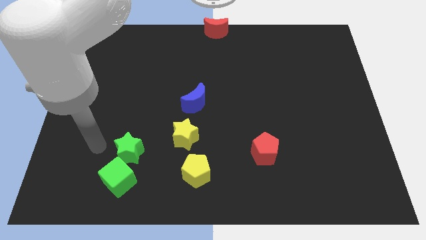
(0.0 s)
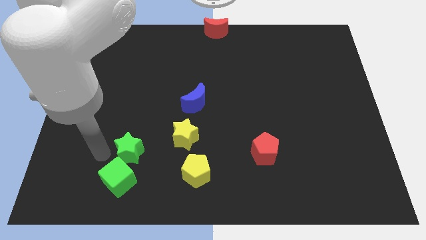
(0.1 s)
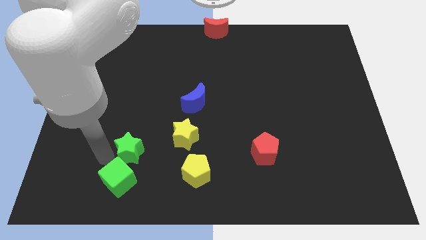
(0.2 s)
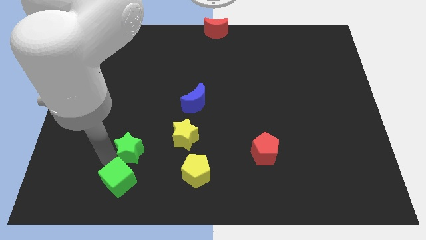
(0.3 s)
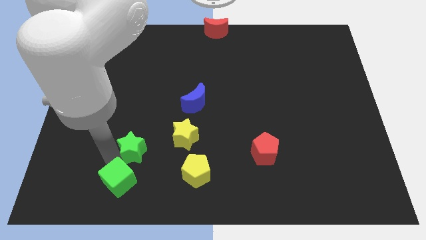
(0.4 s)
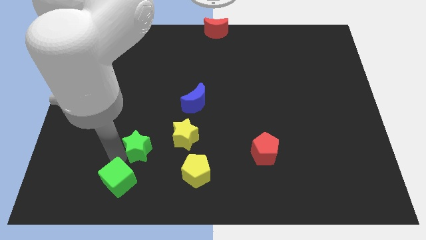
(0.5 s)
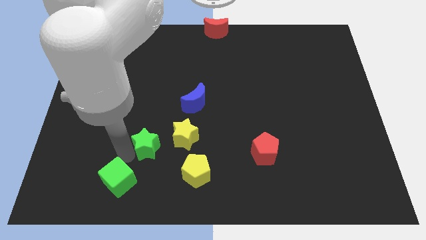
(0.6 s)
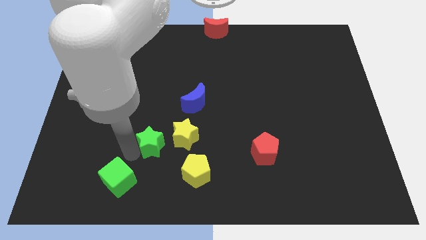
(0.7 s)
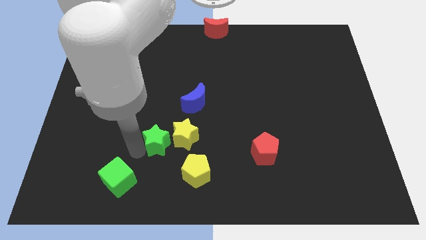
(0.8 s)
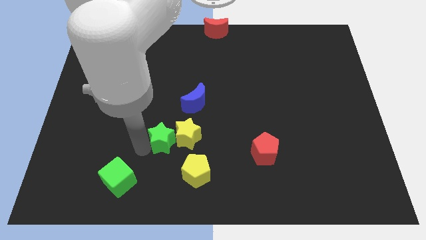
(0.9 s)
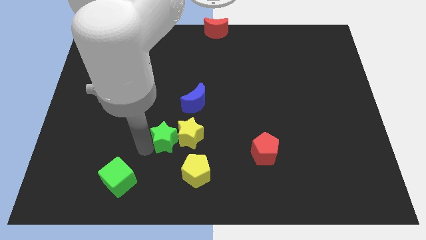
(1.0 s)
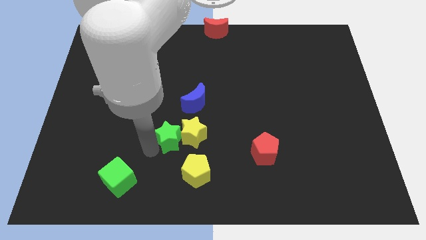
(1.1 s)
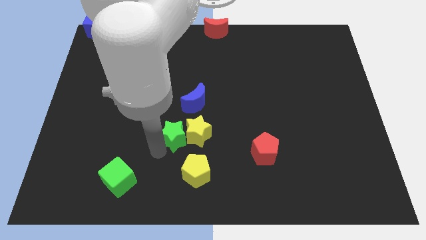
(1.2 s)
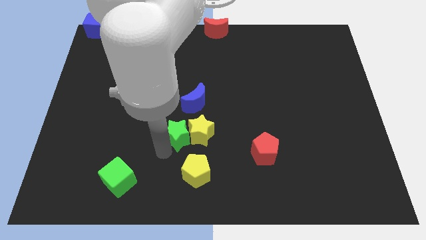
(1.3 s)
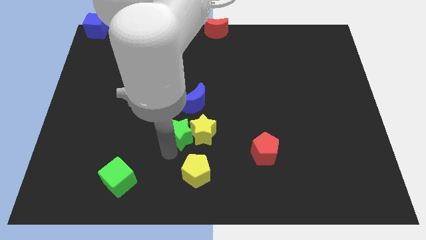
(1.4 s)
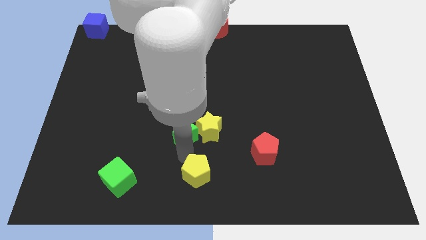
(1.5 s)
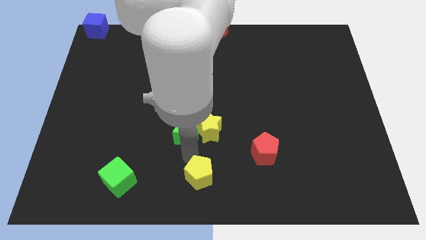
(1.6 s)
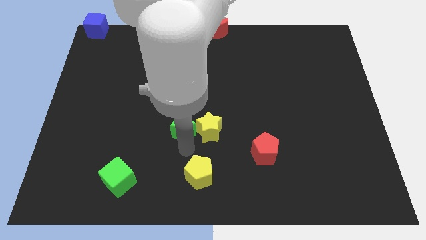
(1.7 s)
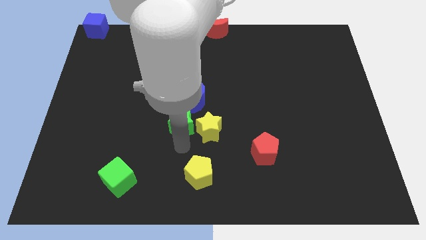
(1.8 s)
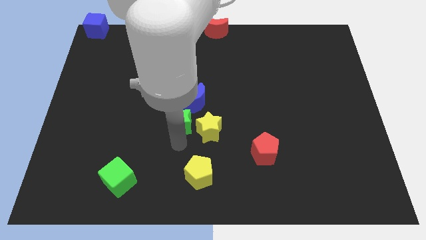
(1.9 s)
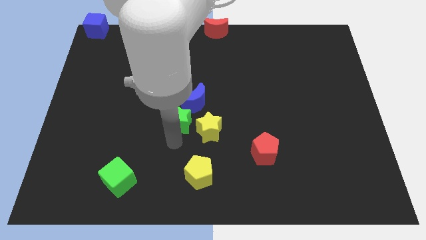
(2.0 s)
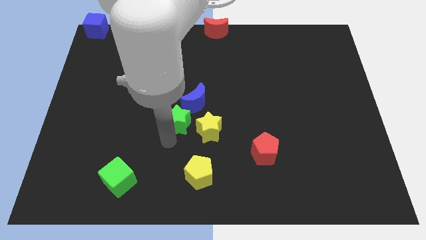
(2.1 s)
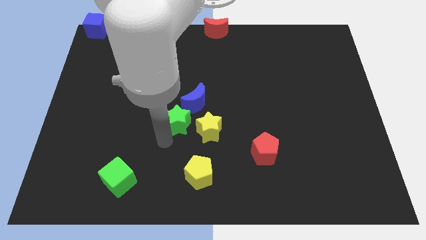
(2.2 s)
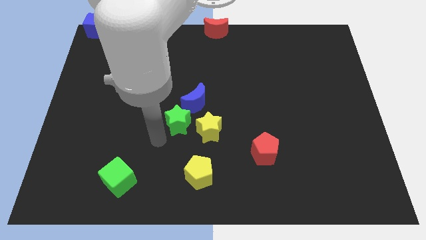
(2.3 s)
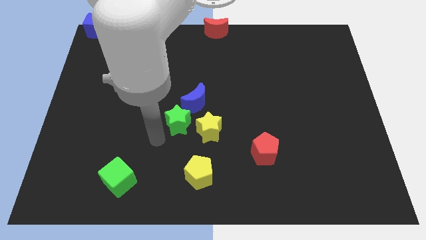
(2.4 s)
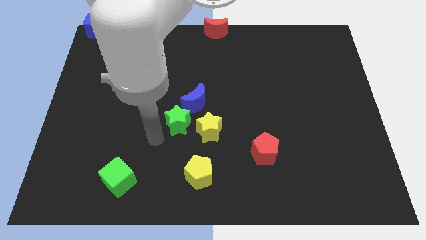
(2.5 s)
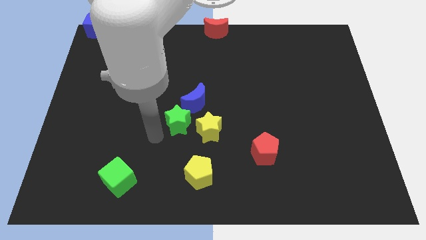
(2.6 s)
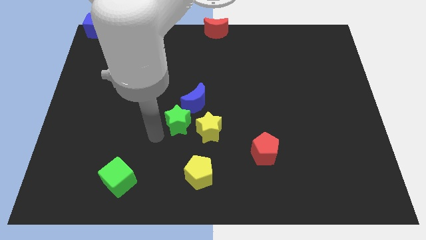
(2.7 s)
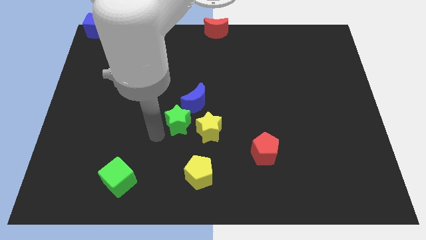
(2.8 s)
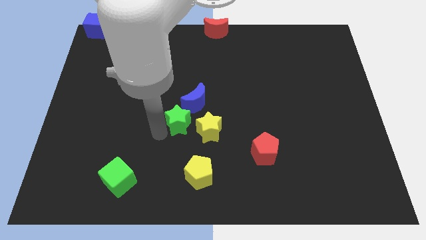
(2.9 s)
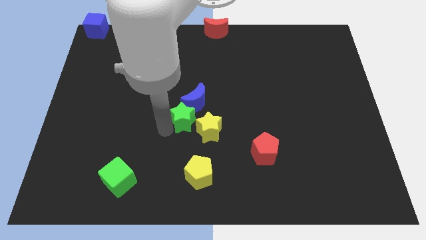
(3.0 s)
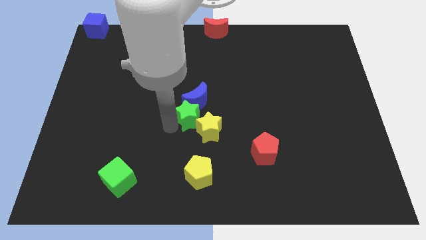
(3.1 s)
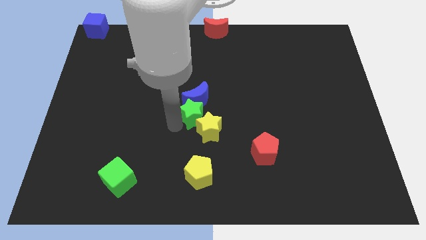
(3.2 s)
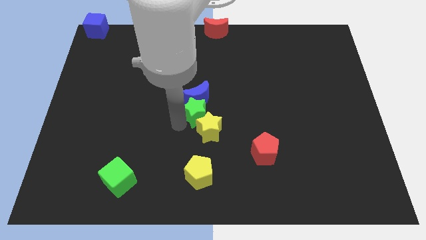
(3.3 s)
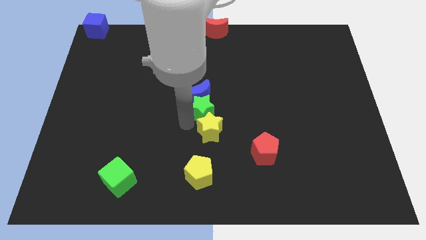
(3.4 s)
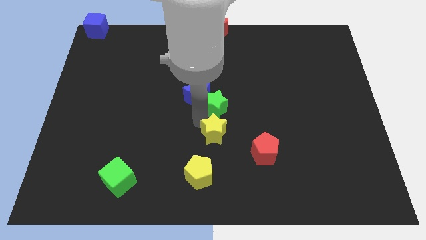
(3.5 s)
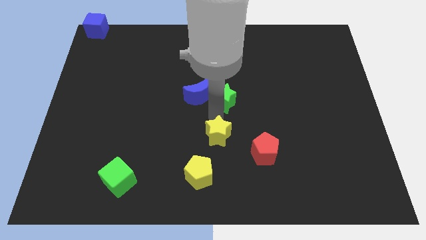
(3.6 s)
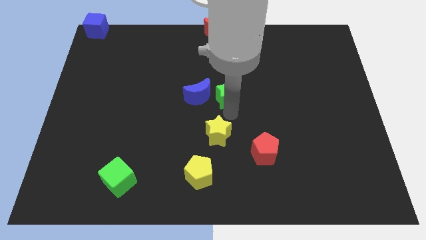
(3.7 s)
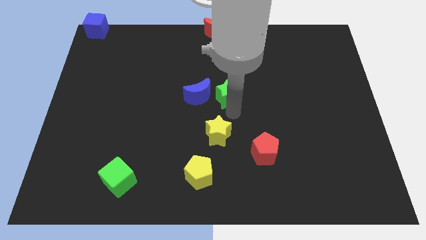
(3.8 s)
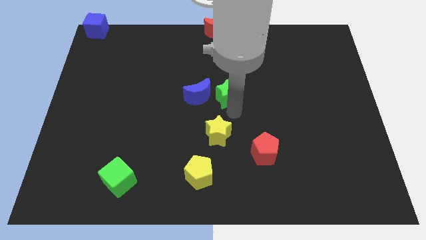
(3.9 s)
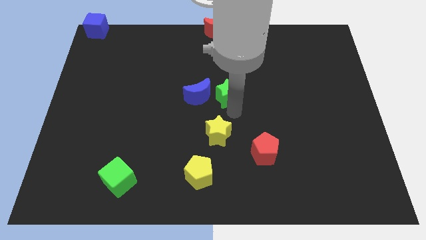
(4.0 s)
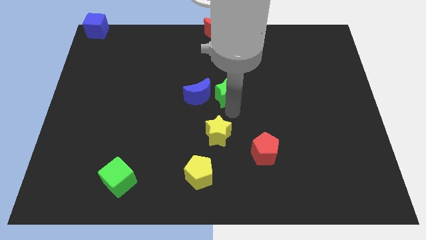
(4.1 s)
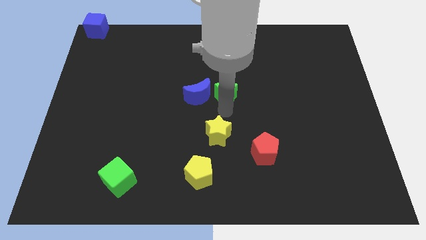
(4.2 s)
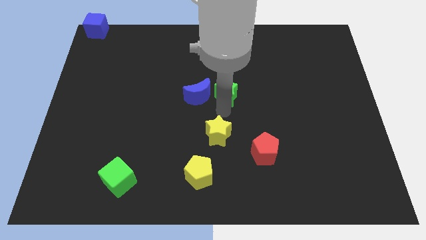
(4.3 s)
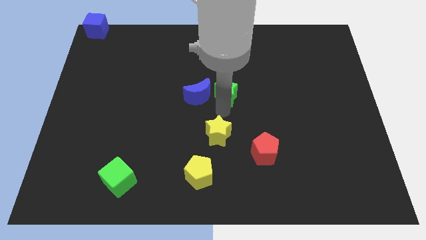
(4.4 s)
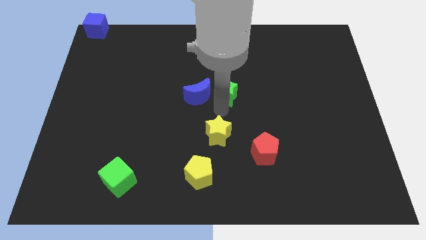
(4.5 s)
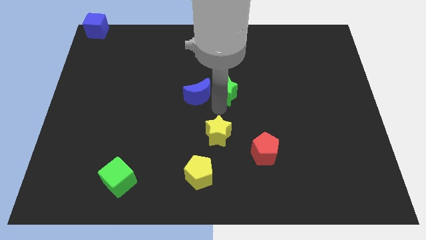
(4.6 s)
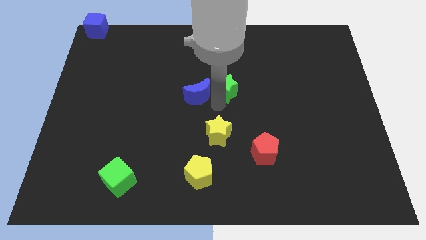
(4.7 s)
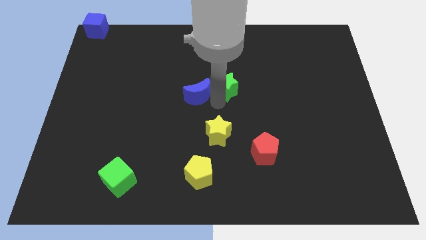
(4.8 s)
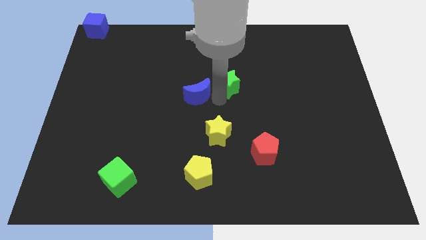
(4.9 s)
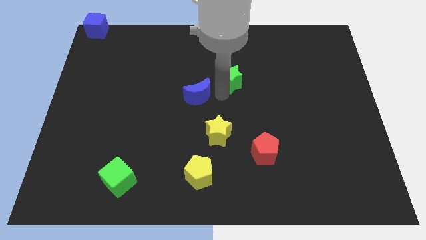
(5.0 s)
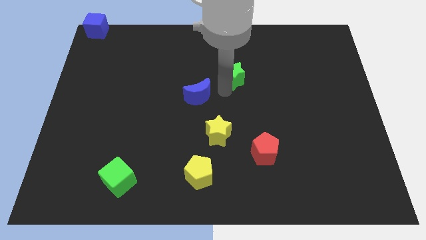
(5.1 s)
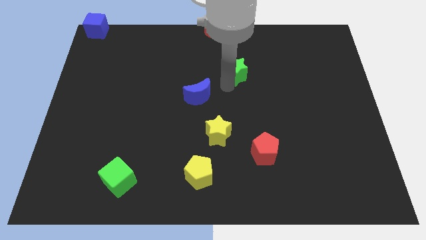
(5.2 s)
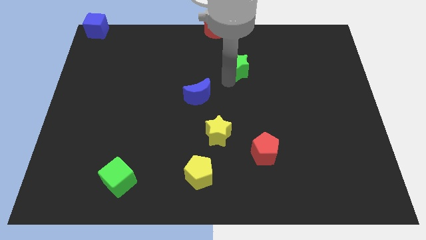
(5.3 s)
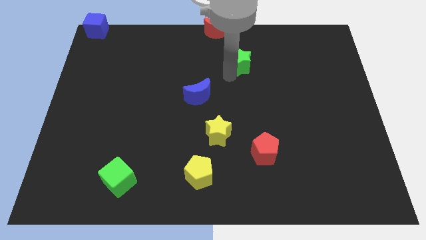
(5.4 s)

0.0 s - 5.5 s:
place both the stars diagonally on the top right side of the yellow pentagon

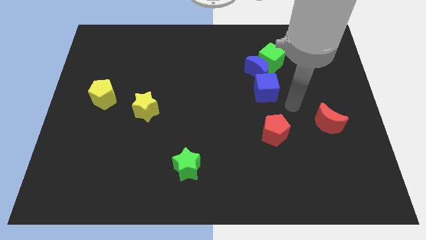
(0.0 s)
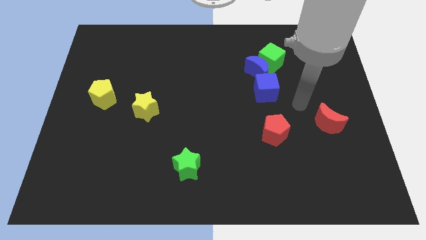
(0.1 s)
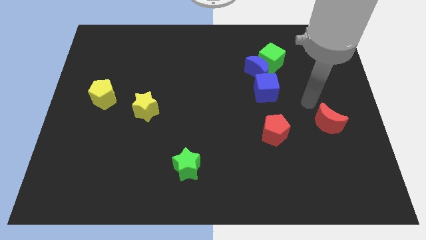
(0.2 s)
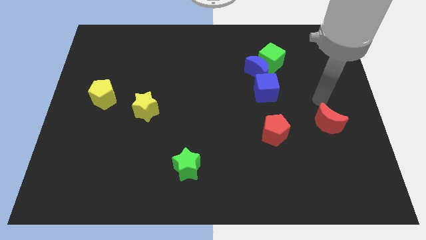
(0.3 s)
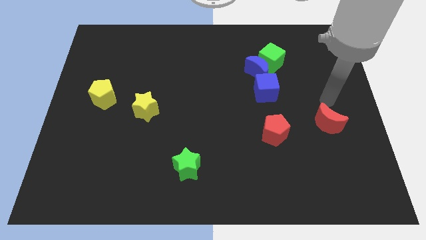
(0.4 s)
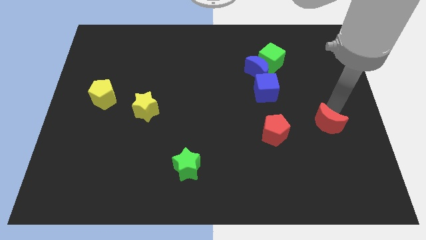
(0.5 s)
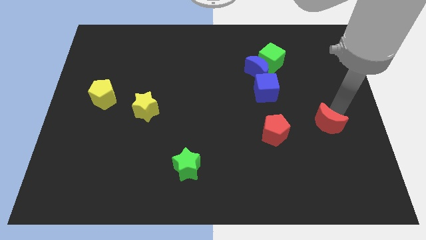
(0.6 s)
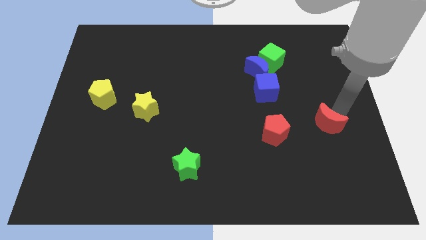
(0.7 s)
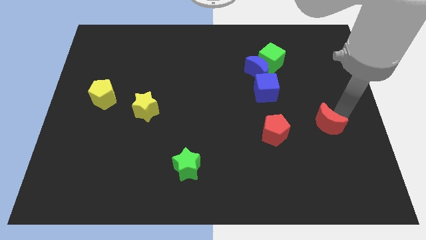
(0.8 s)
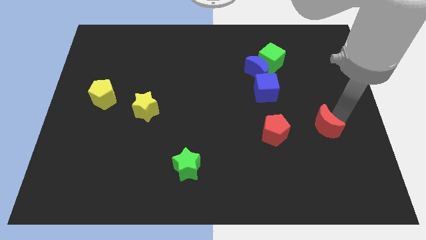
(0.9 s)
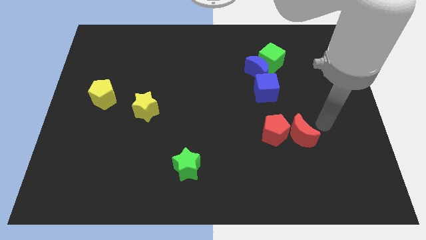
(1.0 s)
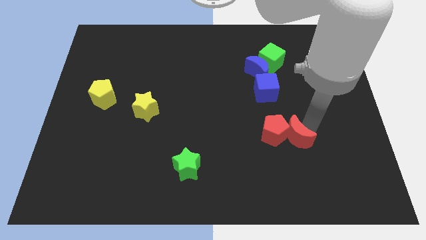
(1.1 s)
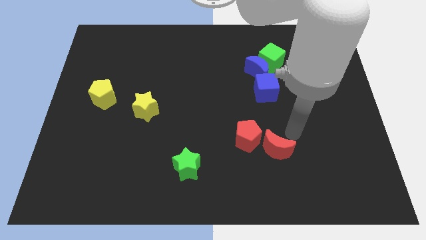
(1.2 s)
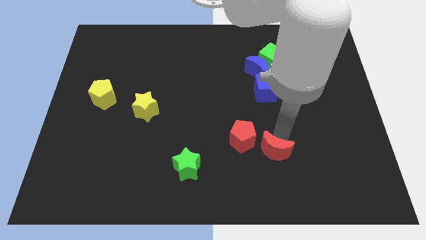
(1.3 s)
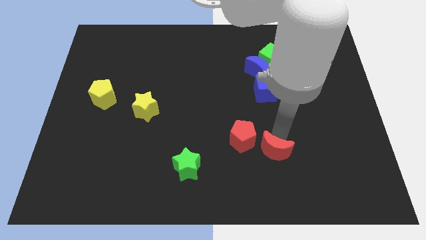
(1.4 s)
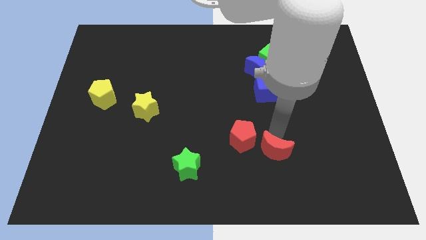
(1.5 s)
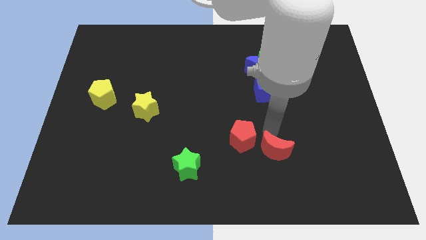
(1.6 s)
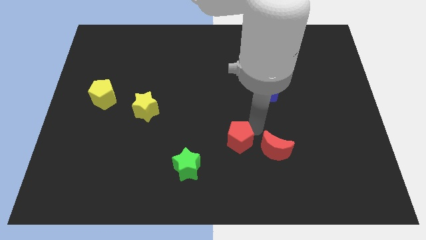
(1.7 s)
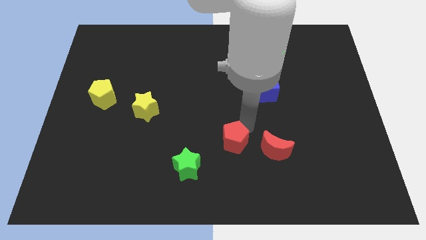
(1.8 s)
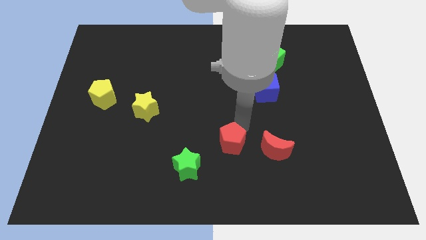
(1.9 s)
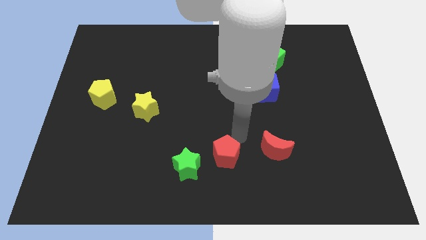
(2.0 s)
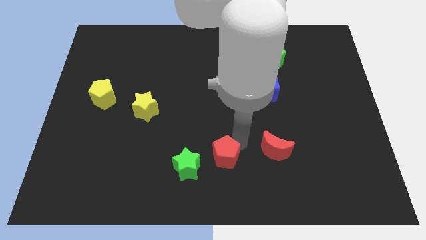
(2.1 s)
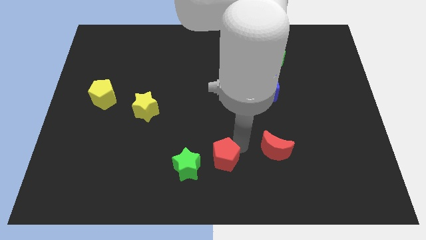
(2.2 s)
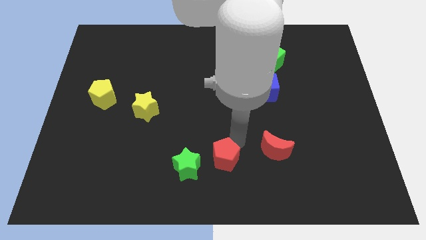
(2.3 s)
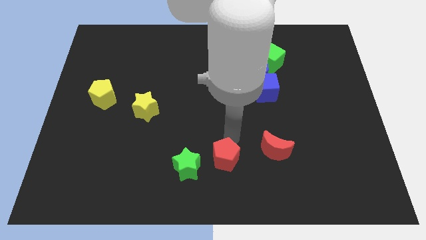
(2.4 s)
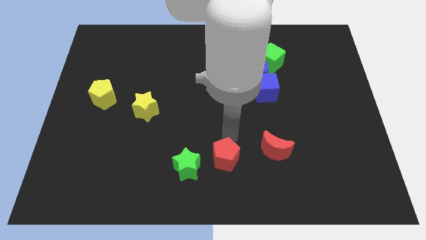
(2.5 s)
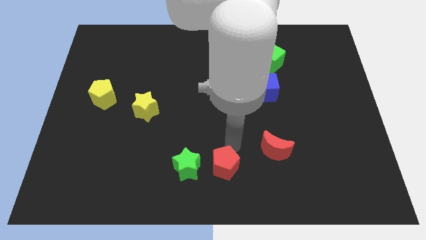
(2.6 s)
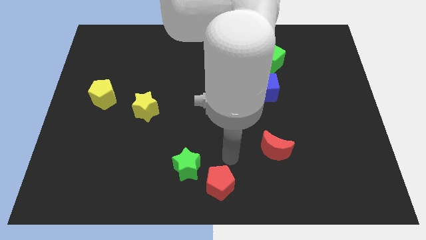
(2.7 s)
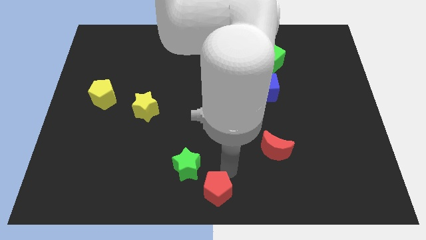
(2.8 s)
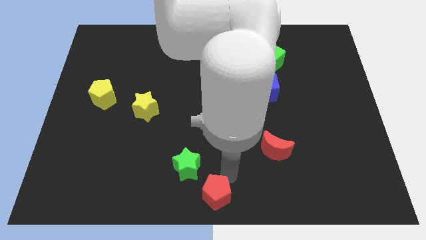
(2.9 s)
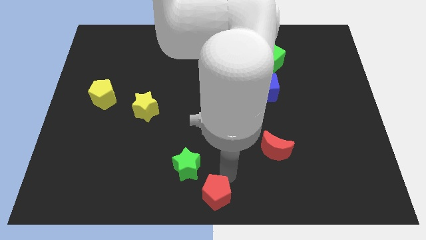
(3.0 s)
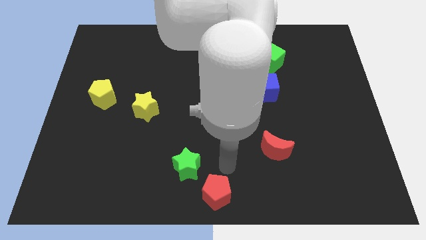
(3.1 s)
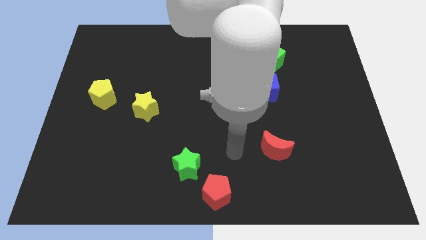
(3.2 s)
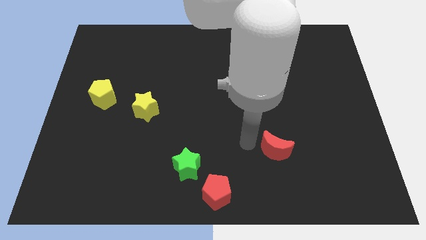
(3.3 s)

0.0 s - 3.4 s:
push the red pentagon to the bottom center of the board

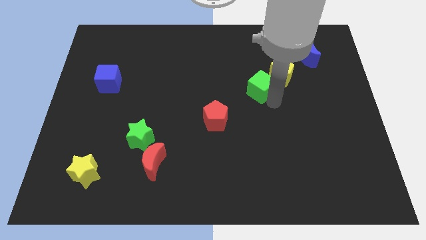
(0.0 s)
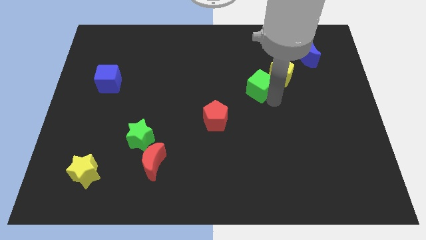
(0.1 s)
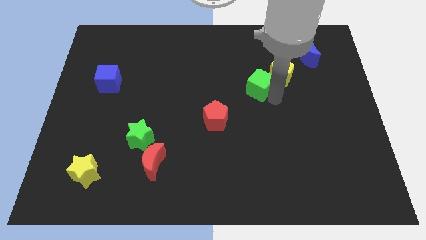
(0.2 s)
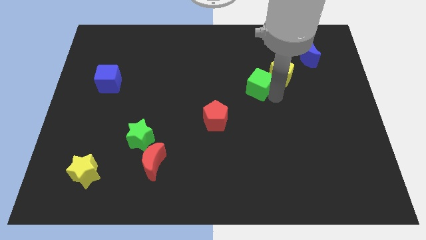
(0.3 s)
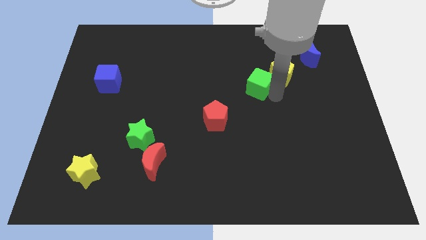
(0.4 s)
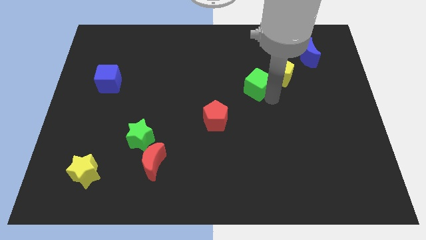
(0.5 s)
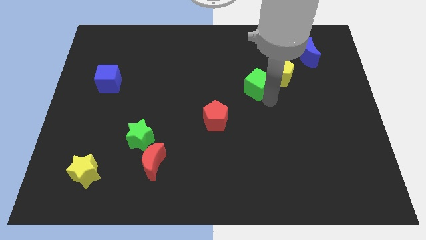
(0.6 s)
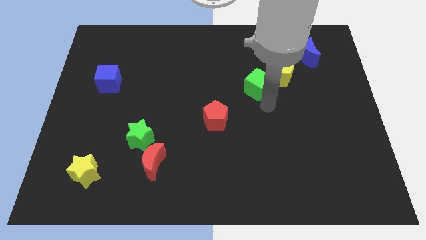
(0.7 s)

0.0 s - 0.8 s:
move the green cube slightly close to the yellow pentagon
